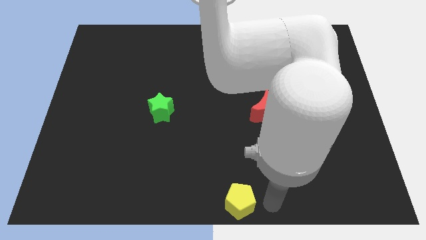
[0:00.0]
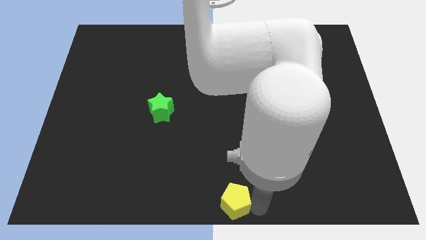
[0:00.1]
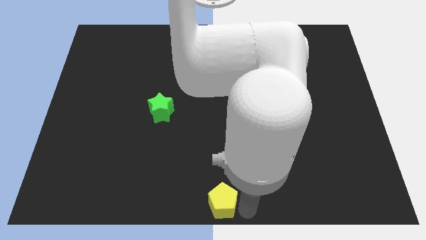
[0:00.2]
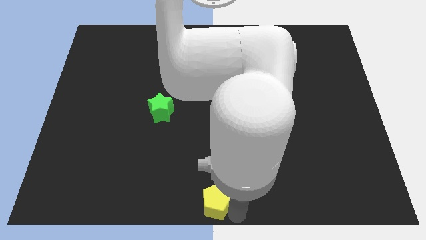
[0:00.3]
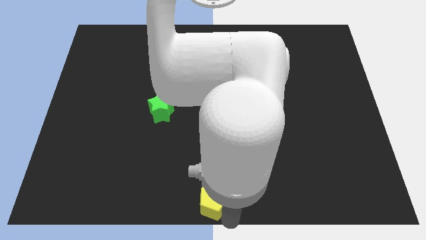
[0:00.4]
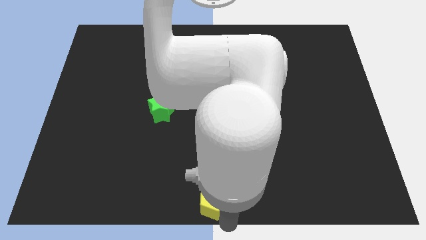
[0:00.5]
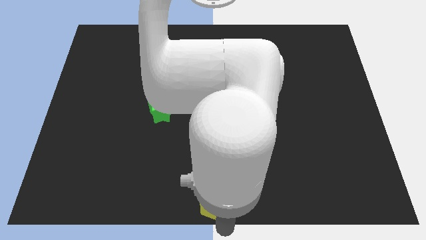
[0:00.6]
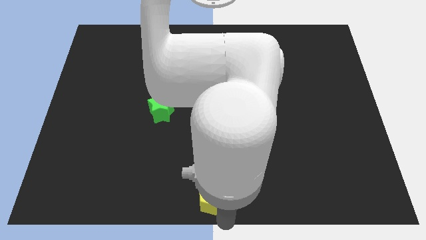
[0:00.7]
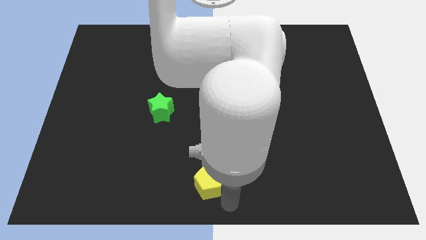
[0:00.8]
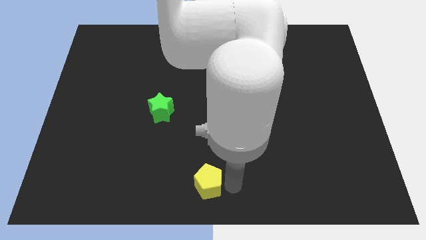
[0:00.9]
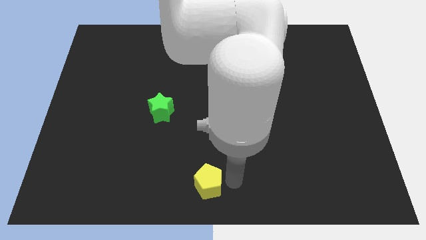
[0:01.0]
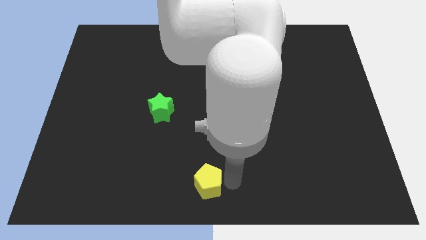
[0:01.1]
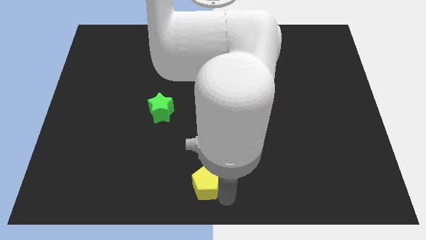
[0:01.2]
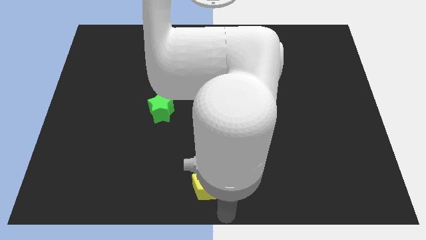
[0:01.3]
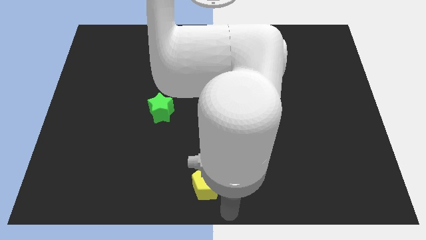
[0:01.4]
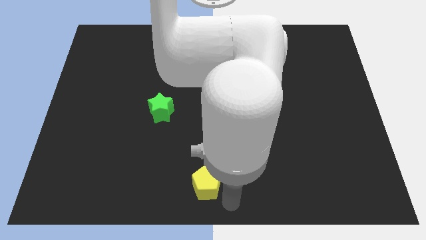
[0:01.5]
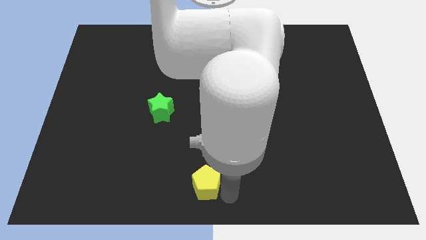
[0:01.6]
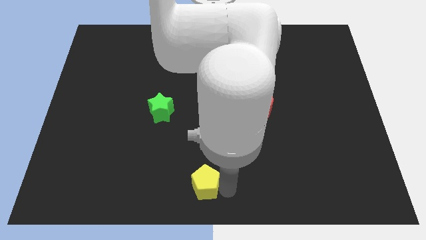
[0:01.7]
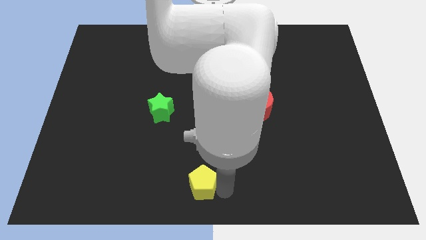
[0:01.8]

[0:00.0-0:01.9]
place the pentagon diagonal to the star

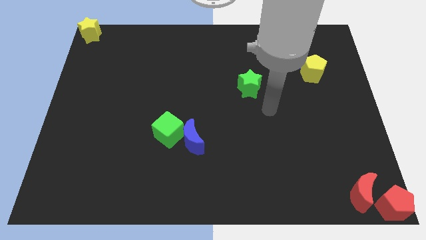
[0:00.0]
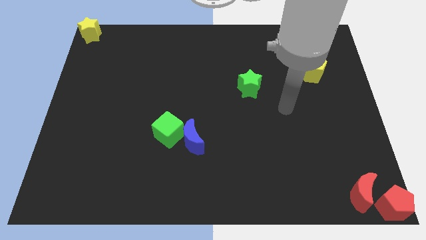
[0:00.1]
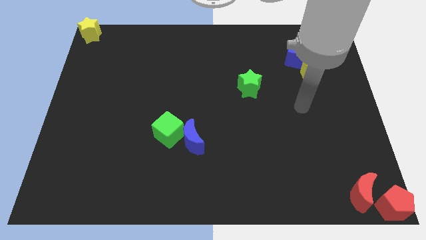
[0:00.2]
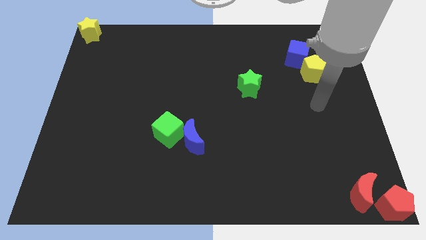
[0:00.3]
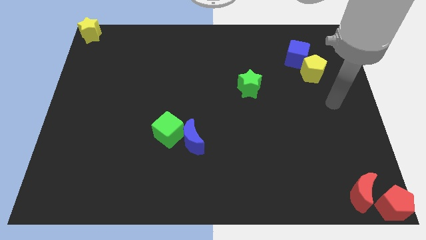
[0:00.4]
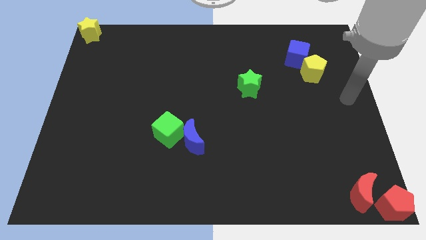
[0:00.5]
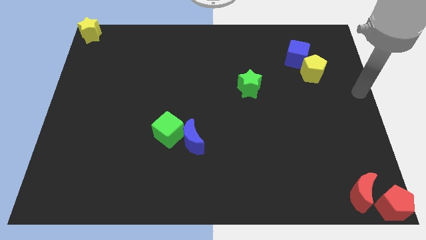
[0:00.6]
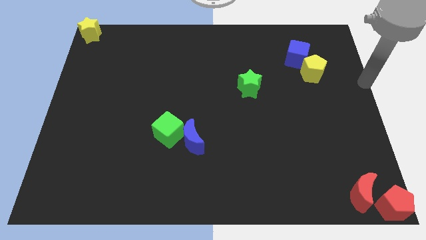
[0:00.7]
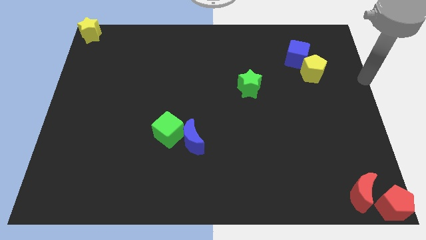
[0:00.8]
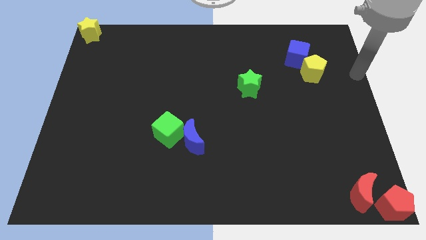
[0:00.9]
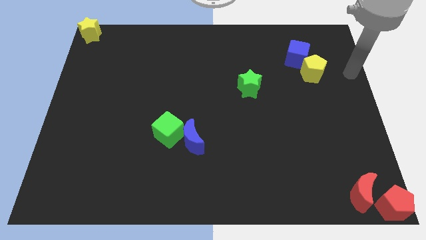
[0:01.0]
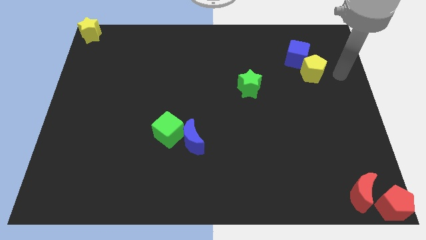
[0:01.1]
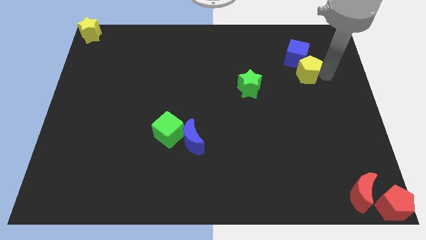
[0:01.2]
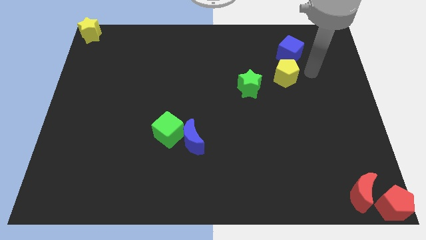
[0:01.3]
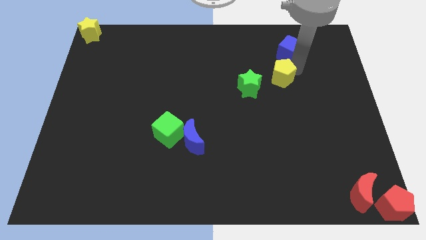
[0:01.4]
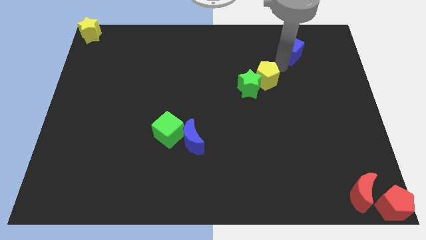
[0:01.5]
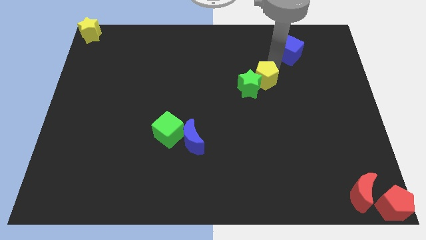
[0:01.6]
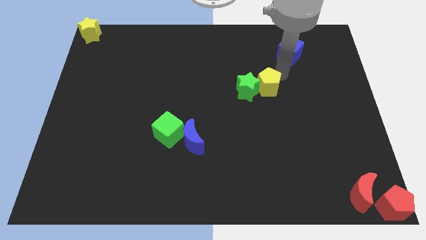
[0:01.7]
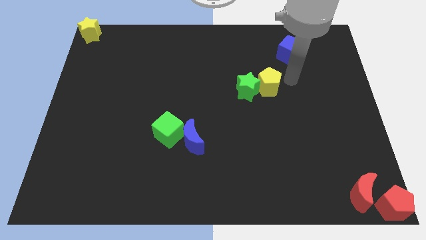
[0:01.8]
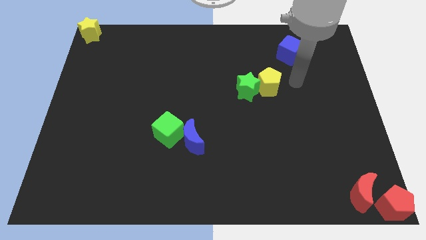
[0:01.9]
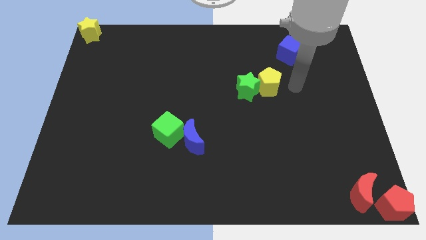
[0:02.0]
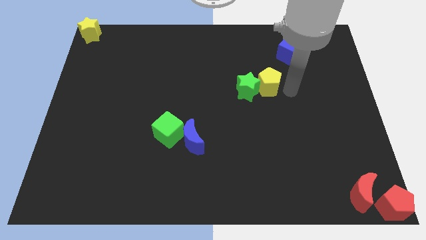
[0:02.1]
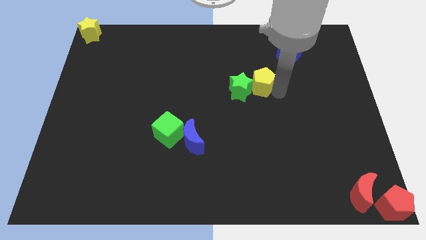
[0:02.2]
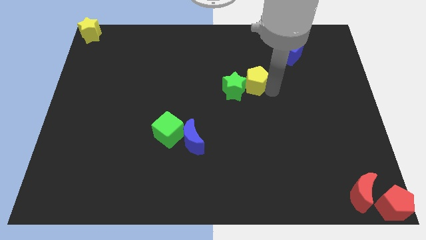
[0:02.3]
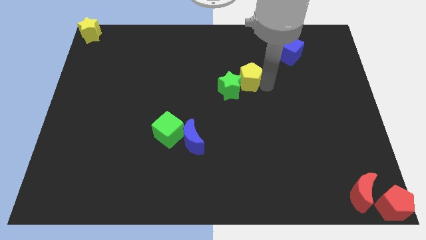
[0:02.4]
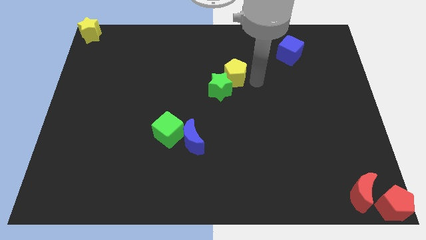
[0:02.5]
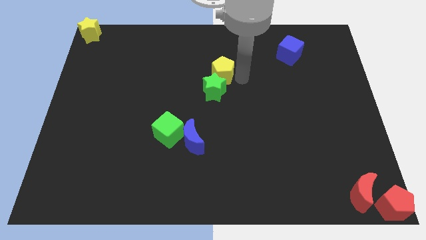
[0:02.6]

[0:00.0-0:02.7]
push the yellow pentagon and green star towards the center of the board

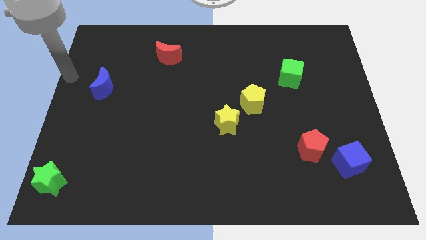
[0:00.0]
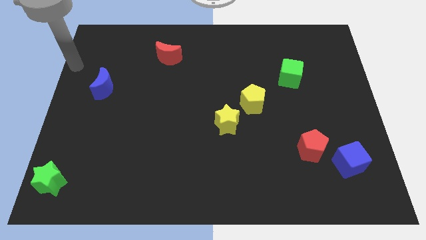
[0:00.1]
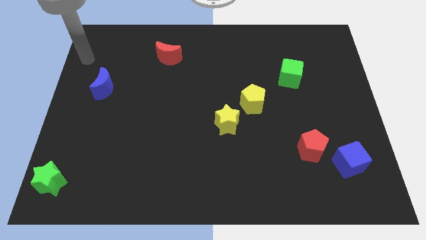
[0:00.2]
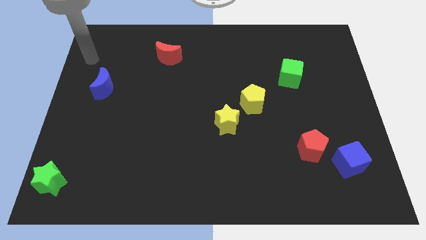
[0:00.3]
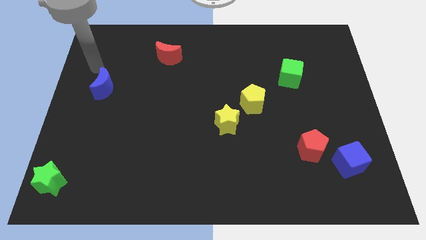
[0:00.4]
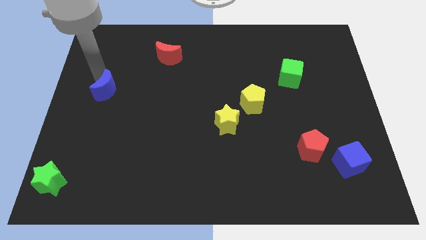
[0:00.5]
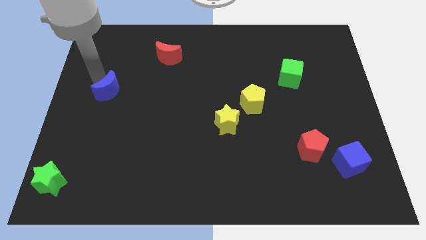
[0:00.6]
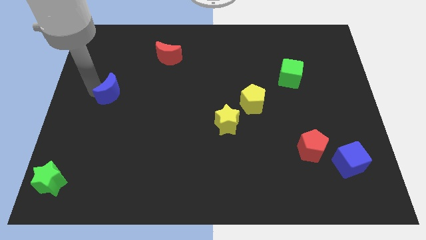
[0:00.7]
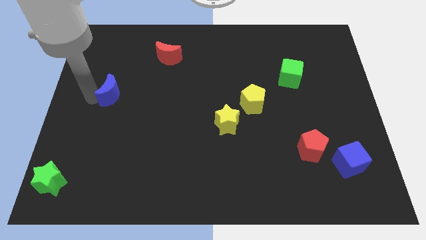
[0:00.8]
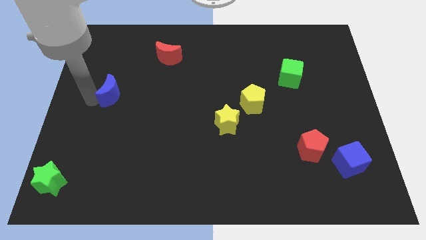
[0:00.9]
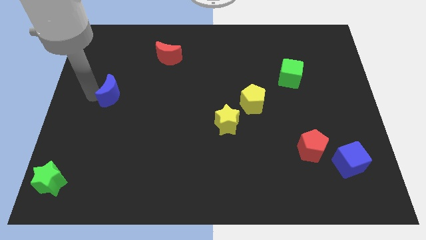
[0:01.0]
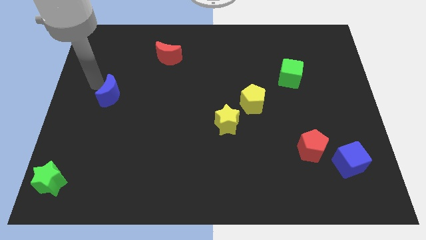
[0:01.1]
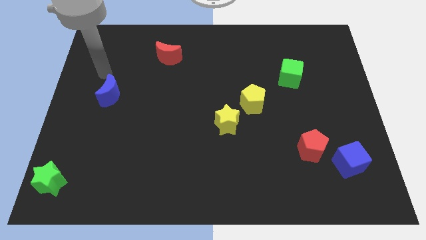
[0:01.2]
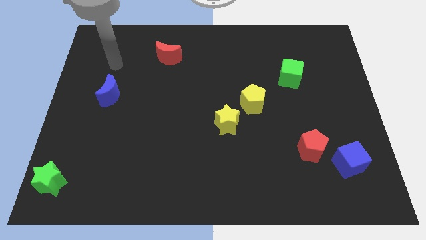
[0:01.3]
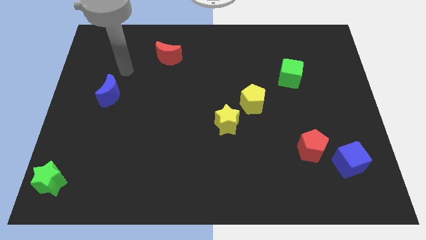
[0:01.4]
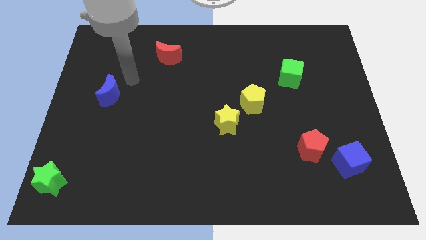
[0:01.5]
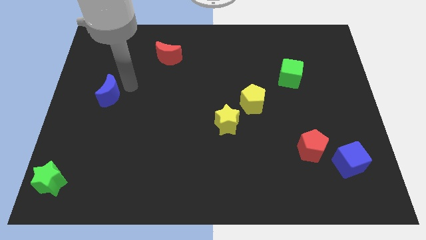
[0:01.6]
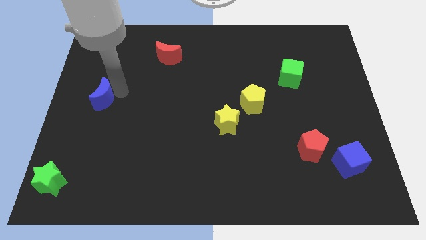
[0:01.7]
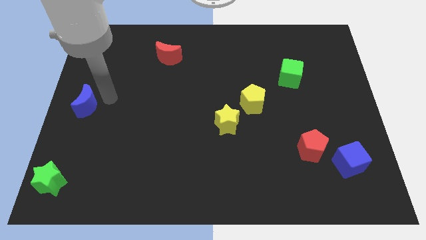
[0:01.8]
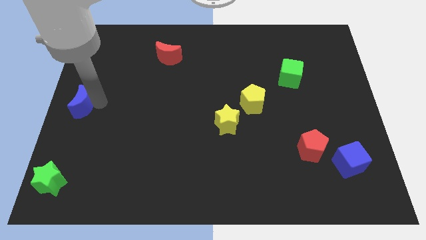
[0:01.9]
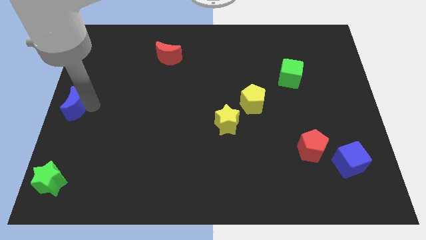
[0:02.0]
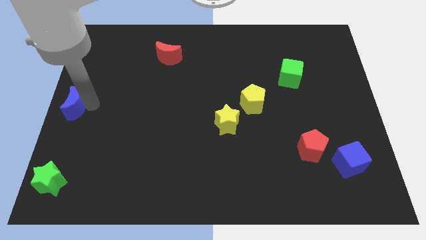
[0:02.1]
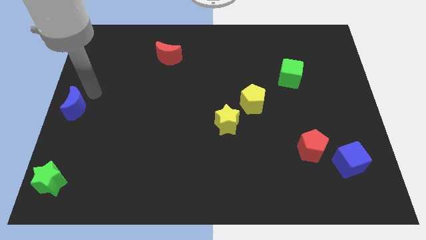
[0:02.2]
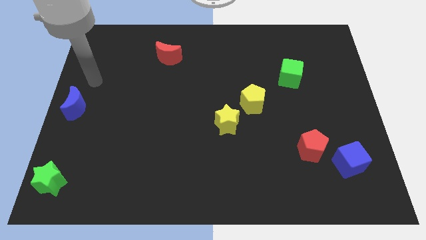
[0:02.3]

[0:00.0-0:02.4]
move the blue moon to the middle left of the board

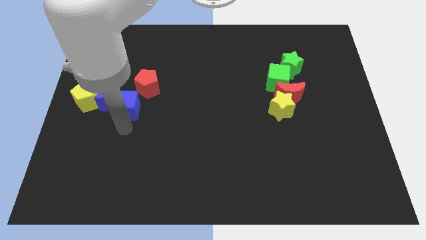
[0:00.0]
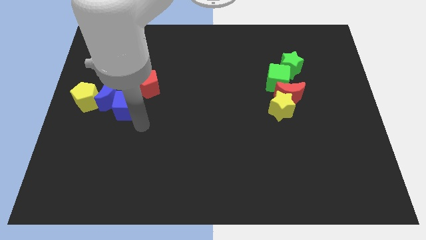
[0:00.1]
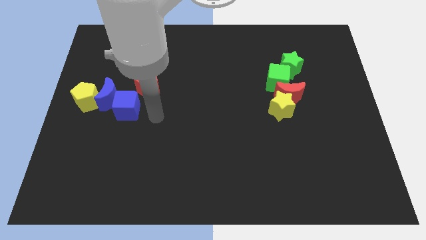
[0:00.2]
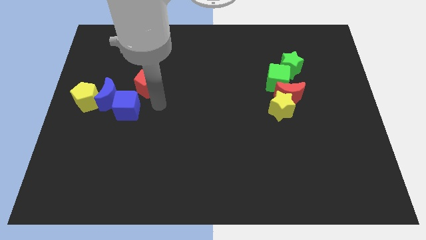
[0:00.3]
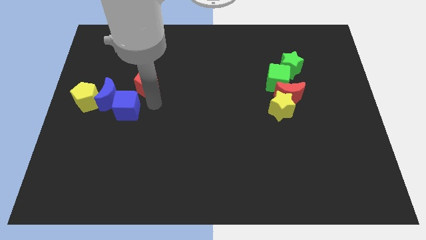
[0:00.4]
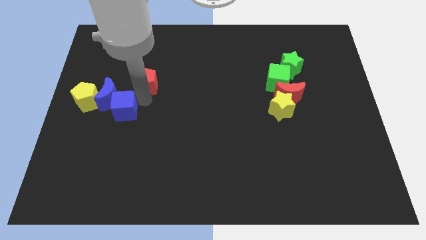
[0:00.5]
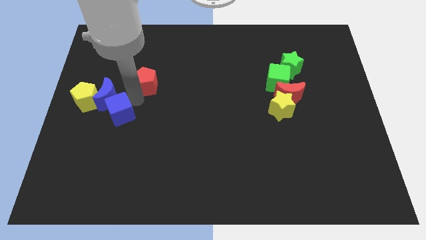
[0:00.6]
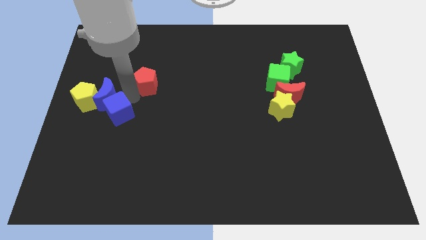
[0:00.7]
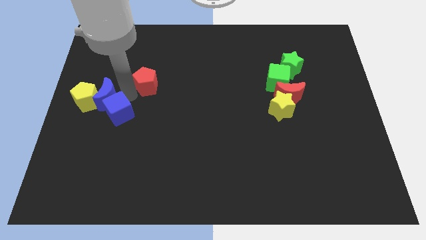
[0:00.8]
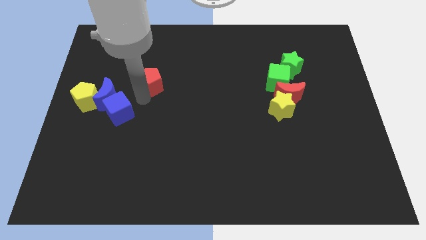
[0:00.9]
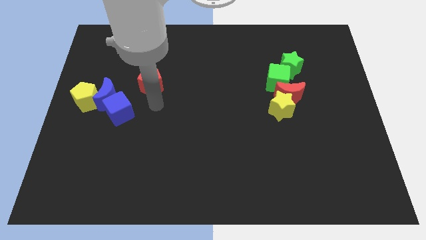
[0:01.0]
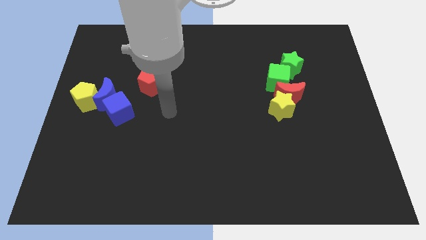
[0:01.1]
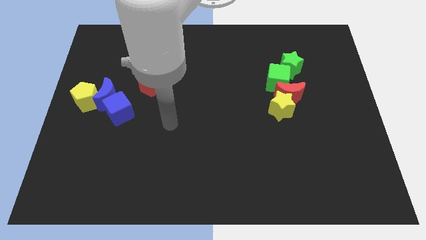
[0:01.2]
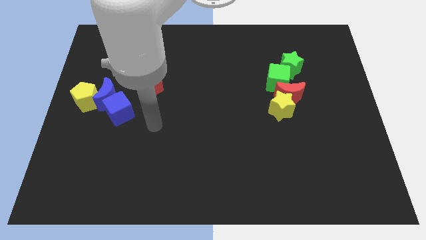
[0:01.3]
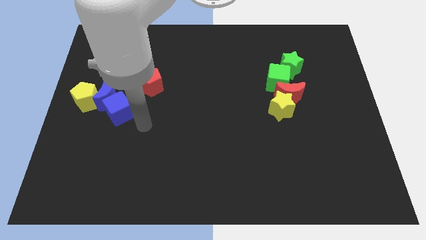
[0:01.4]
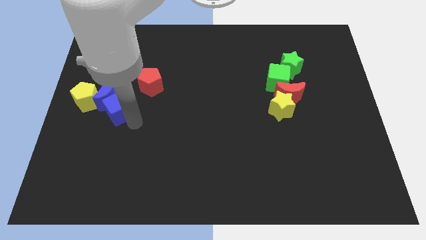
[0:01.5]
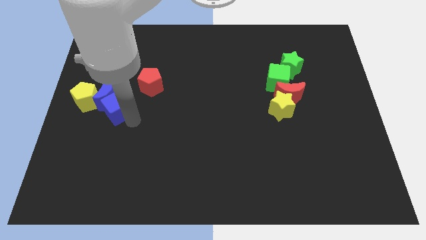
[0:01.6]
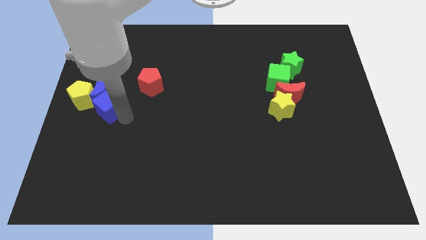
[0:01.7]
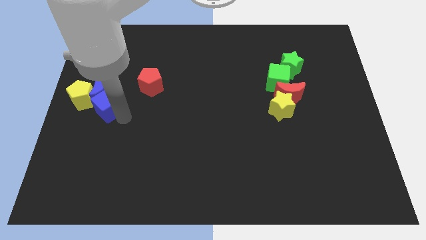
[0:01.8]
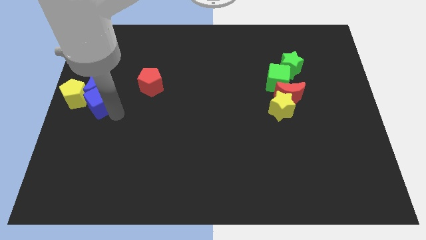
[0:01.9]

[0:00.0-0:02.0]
push the blue blocks and yellow pentagon towards the center left
